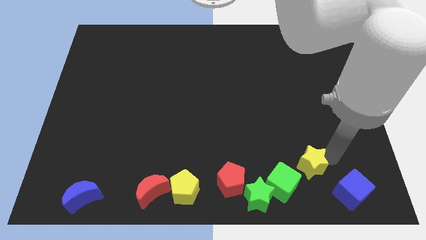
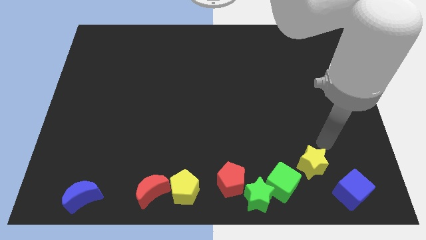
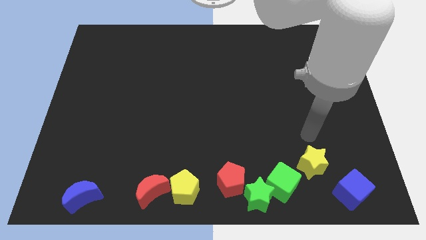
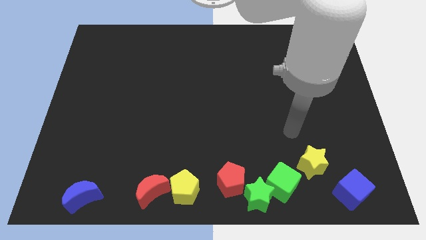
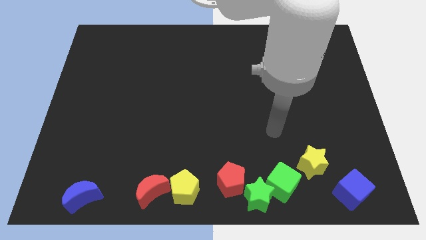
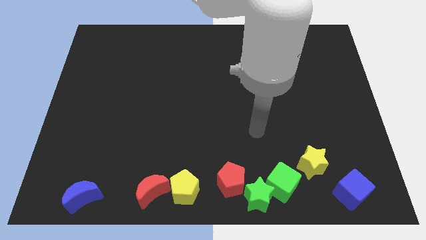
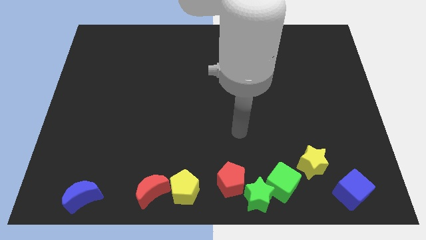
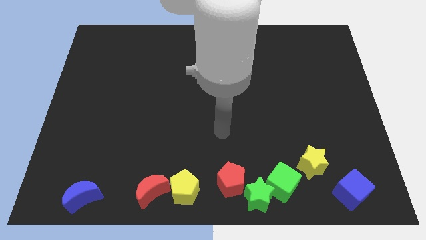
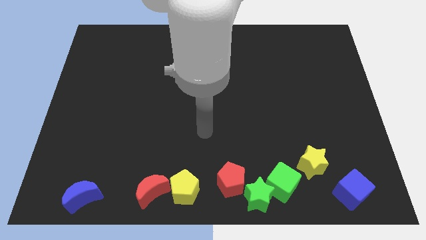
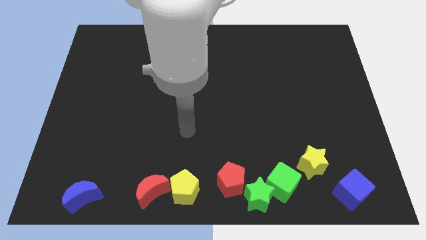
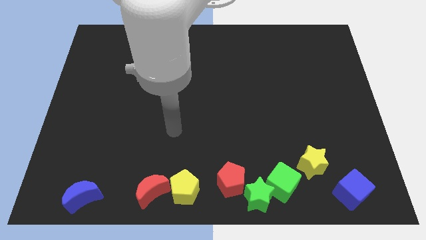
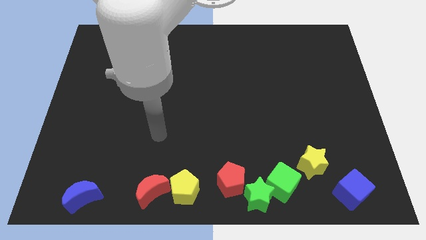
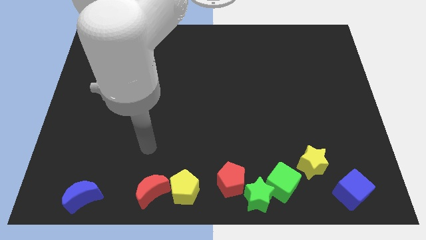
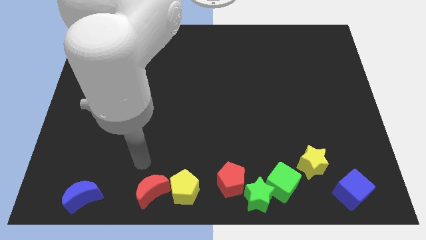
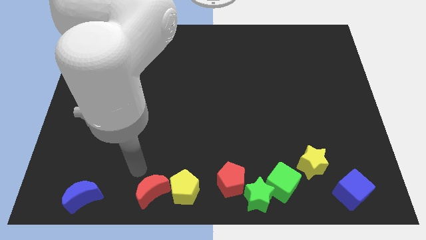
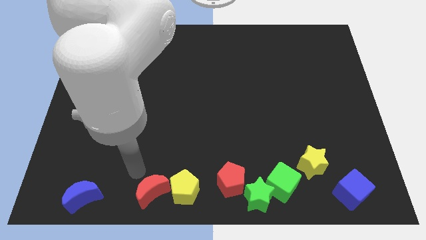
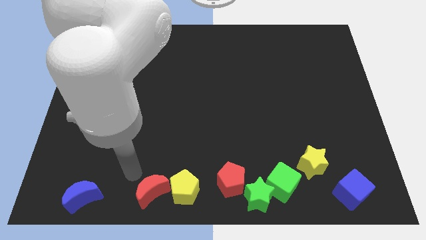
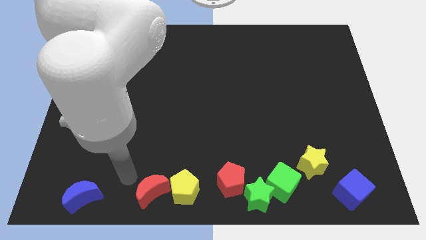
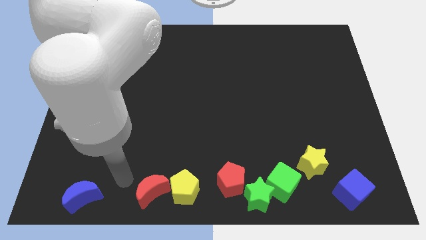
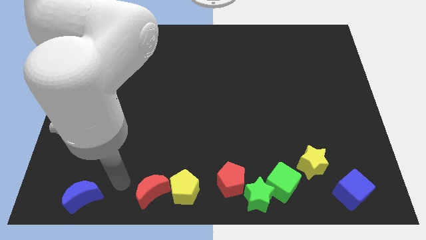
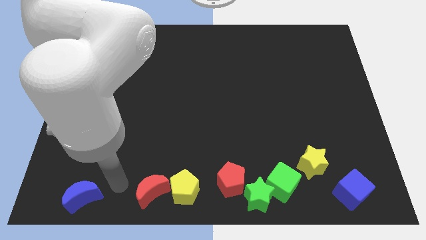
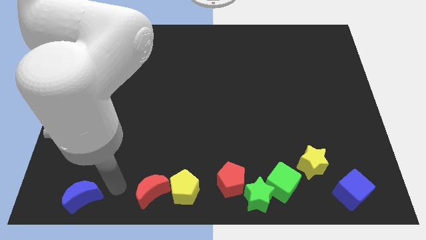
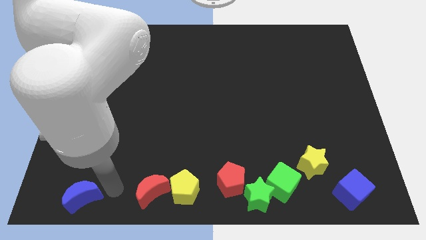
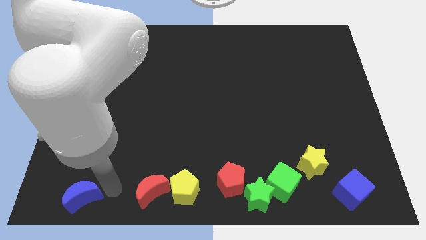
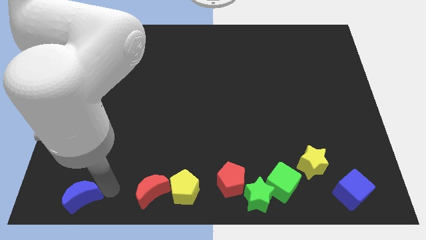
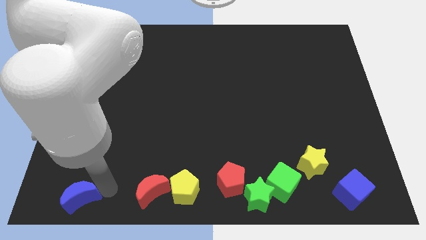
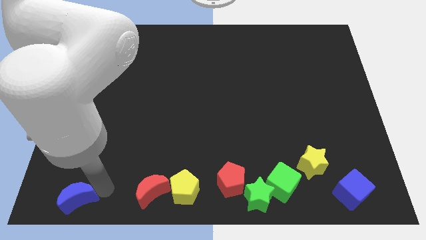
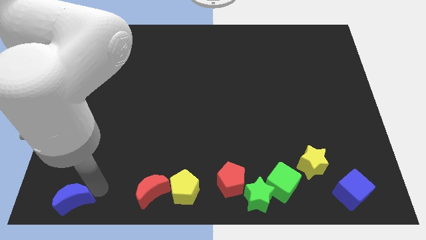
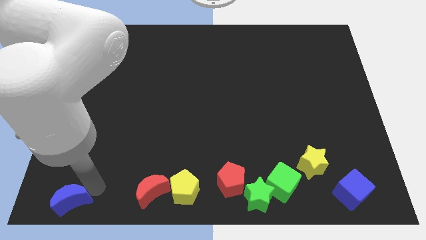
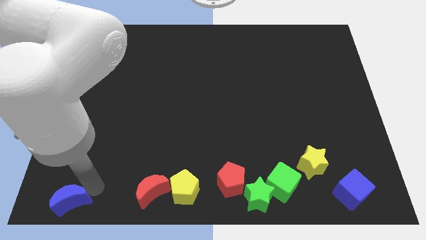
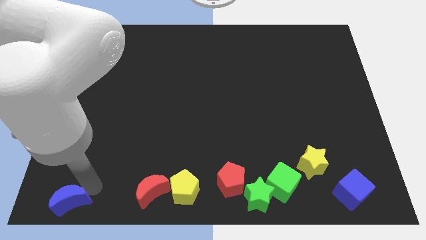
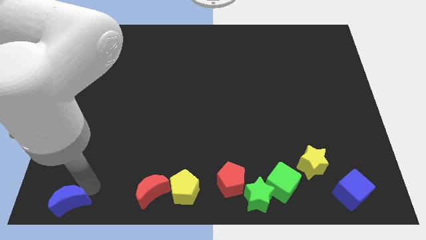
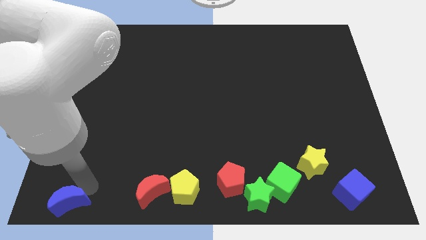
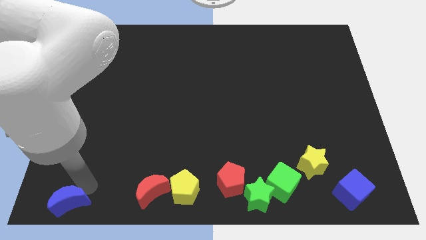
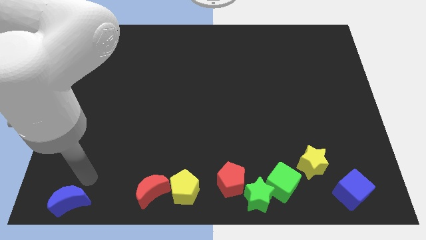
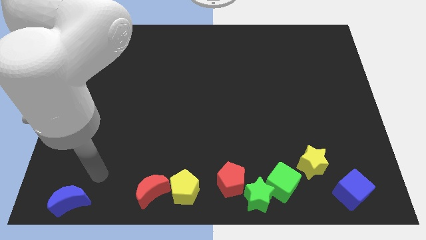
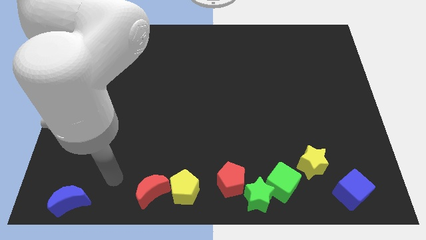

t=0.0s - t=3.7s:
move your arm away from the yellow star

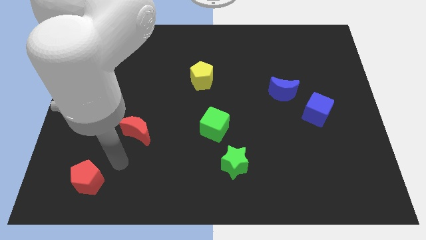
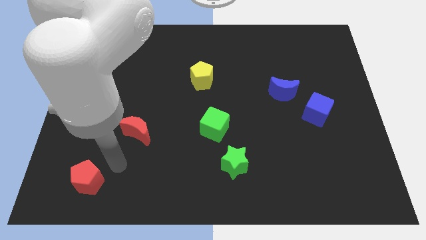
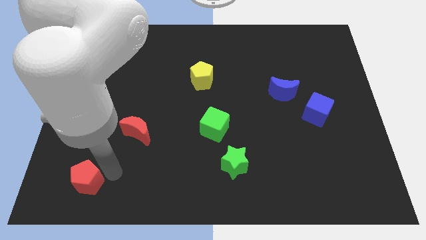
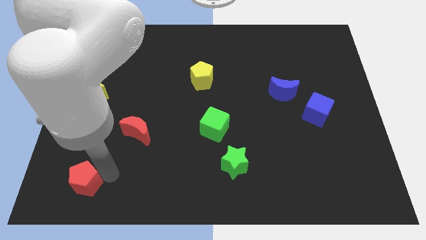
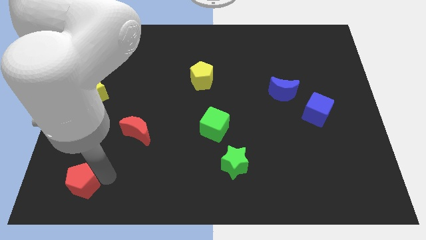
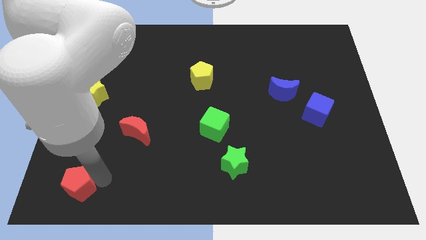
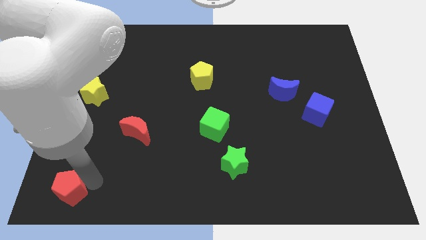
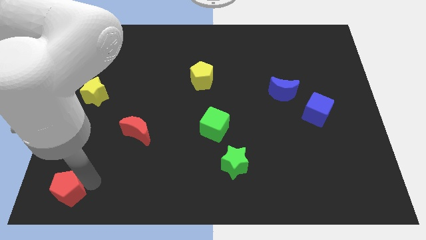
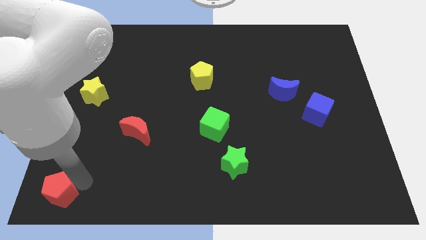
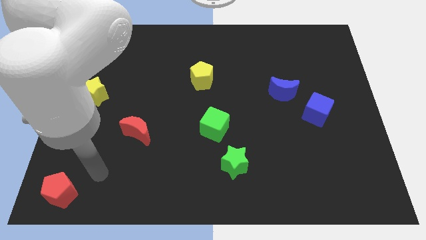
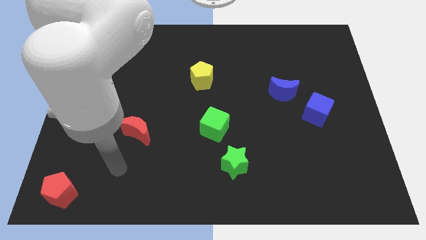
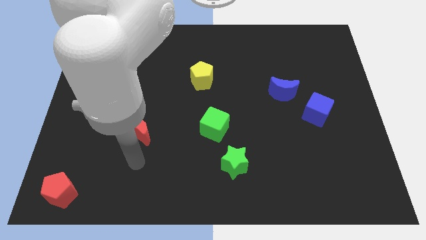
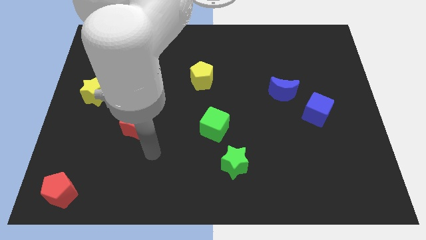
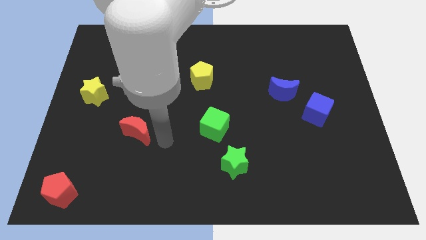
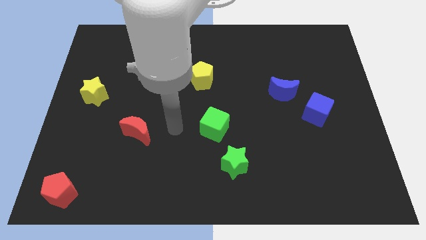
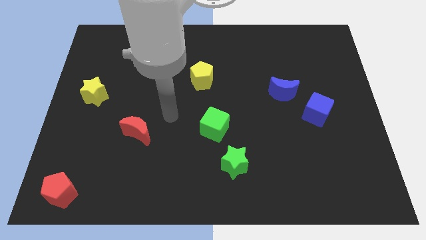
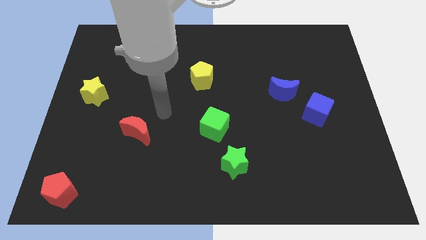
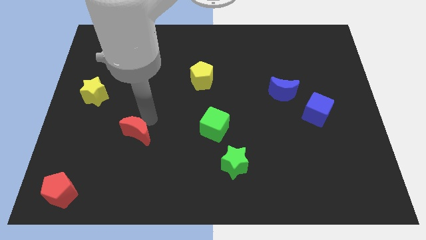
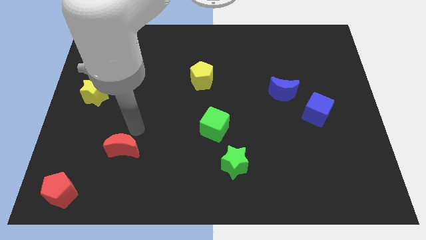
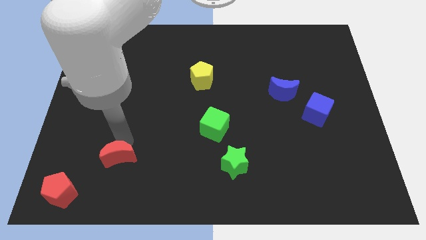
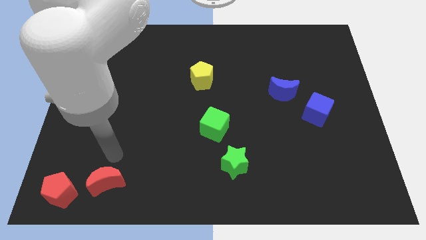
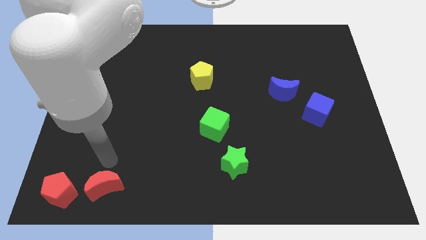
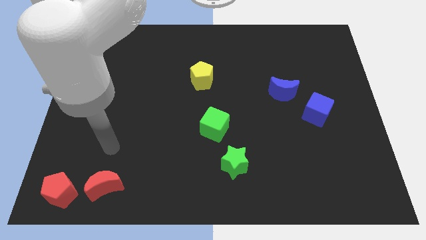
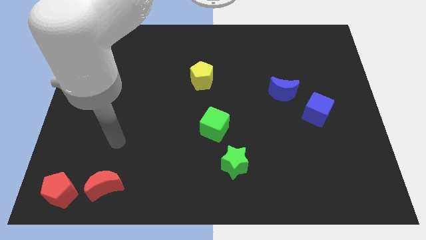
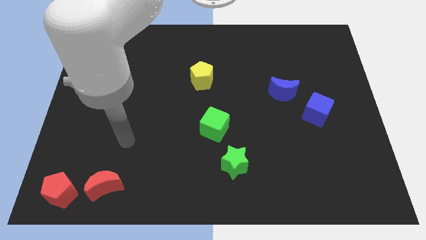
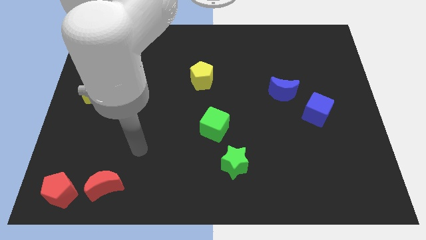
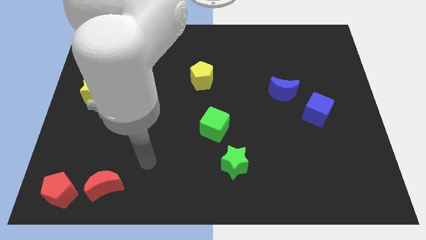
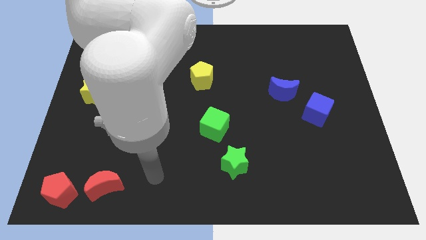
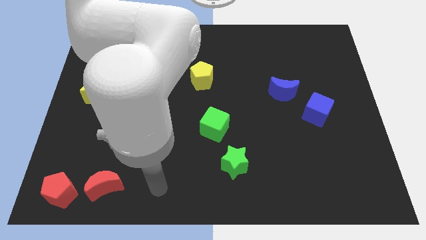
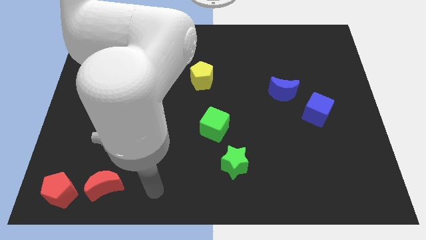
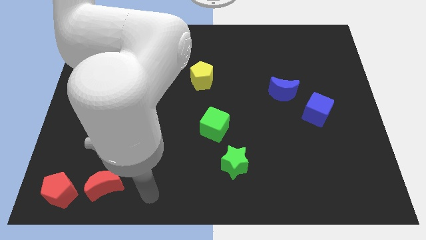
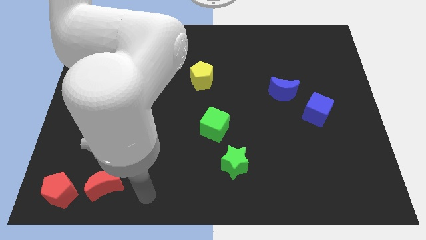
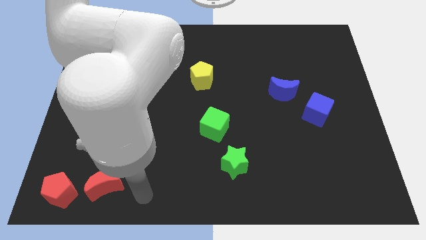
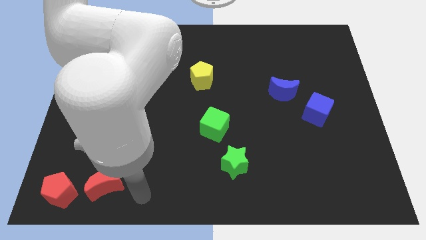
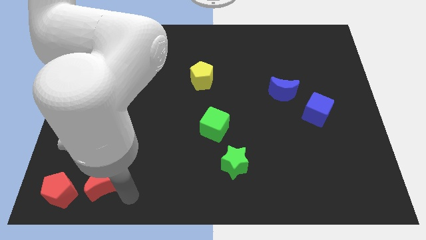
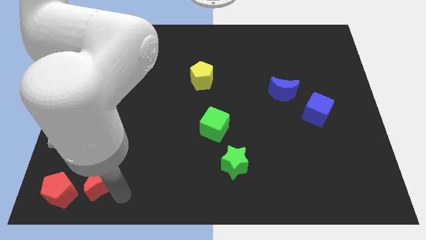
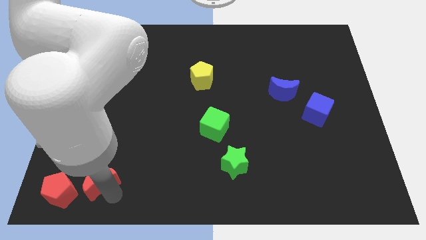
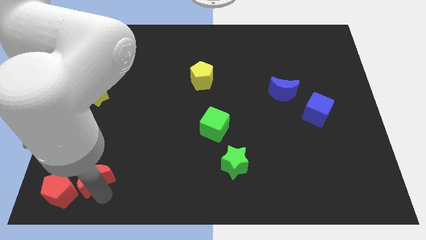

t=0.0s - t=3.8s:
place the red blocks together vertically below the yellow star

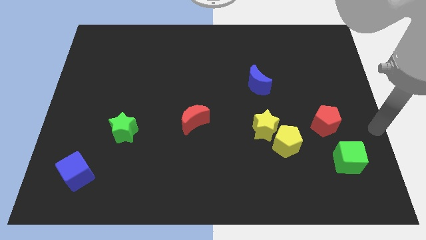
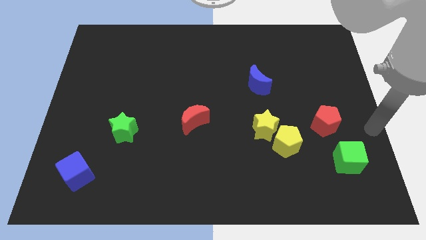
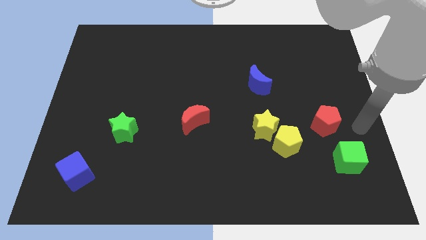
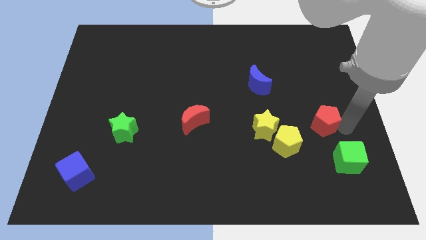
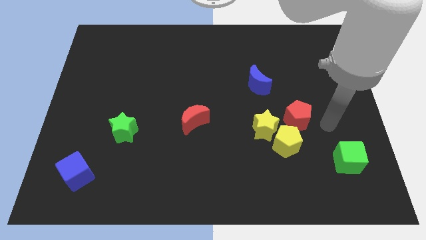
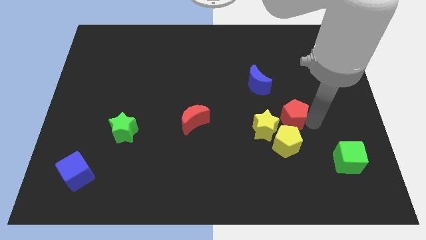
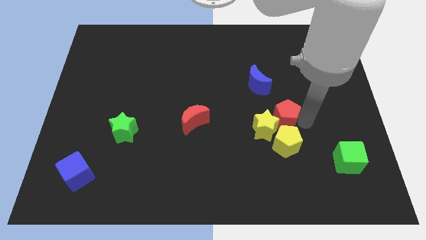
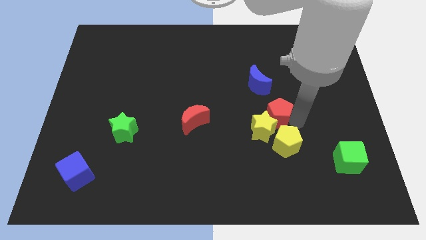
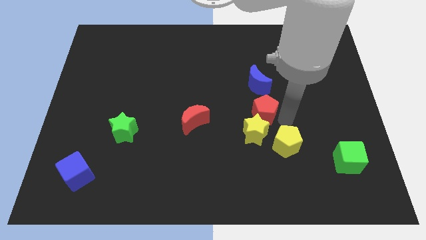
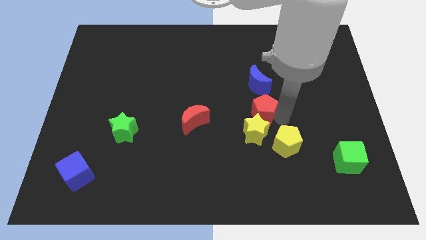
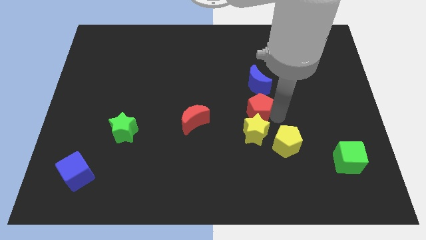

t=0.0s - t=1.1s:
move the red pentagon to the top of the yellow star

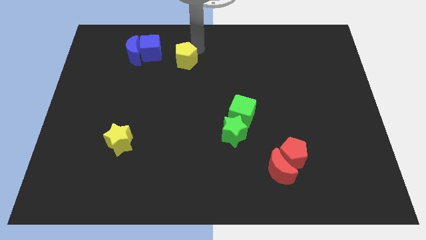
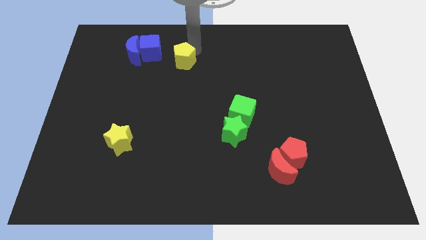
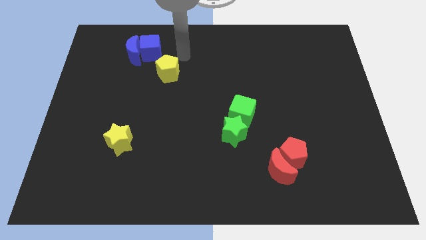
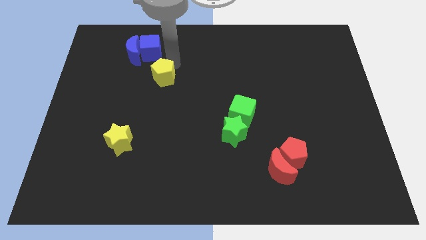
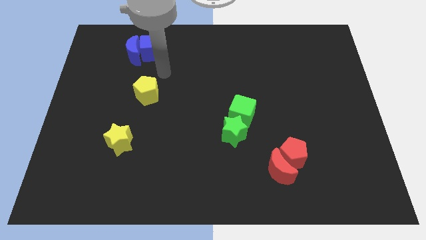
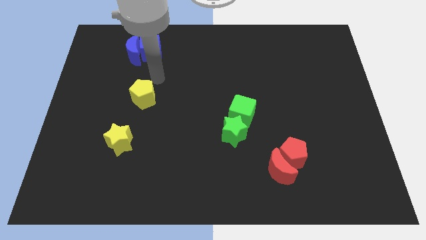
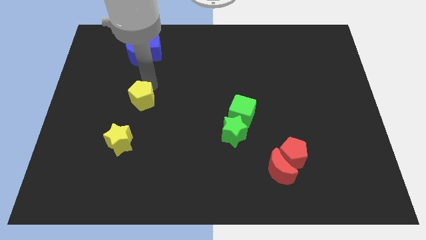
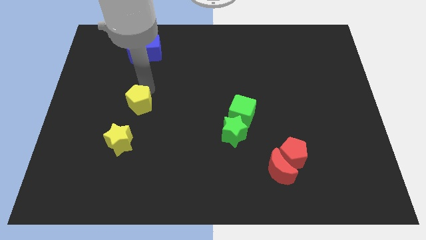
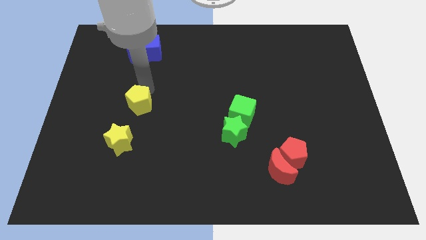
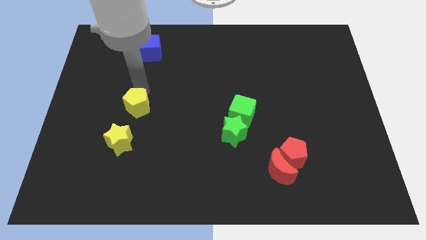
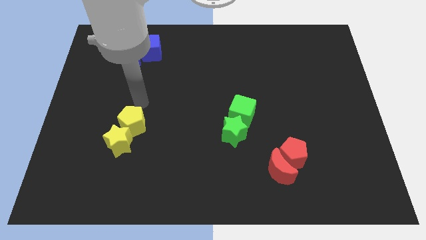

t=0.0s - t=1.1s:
add yellow pentagon into yellow star
